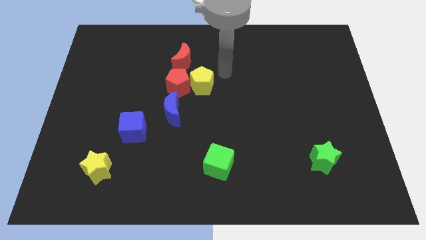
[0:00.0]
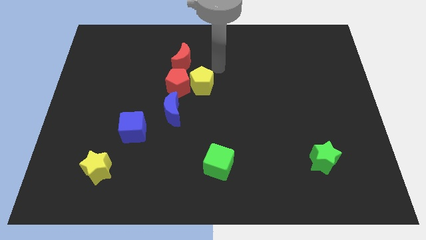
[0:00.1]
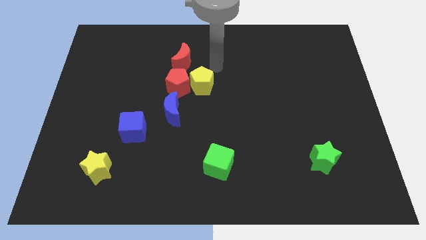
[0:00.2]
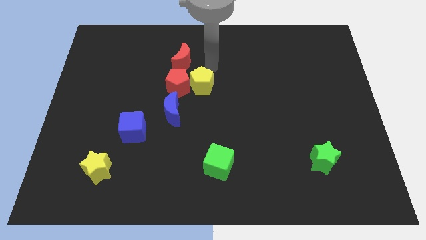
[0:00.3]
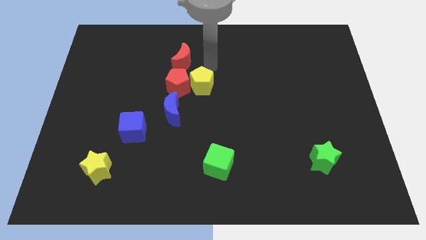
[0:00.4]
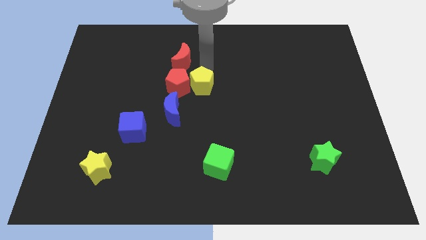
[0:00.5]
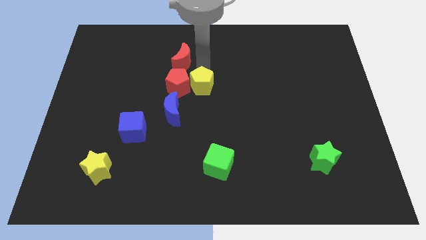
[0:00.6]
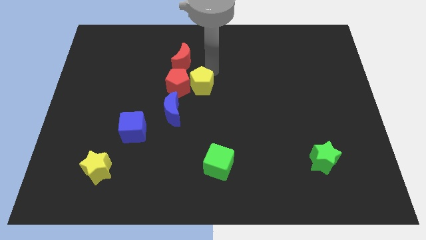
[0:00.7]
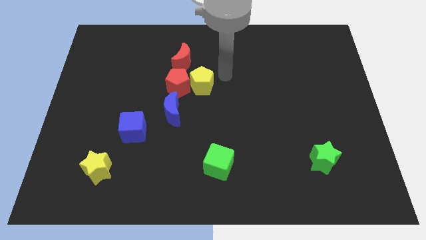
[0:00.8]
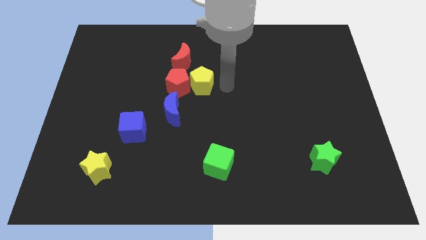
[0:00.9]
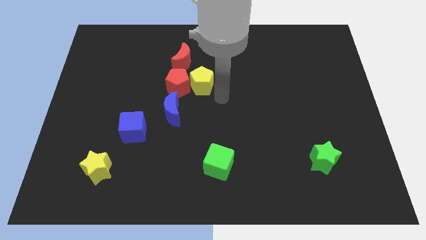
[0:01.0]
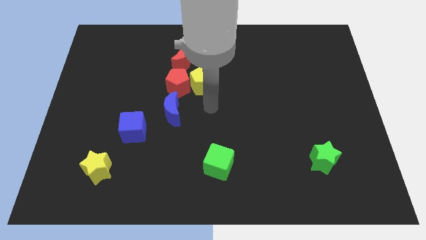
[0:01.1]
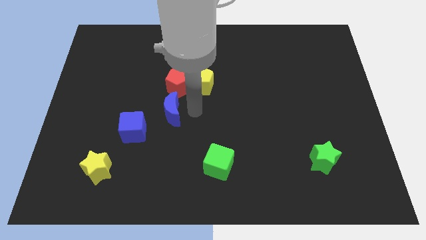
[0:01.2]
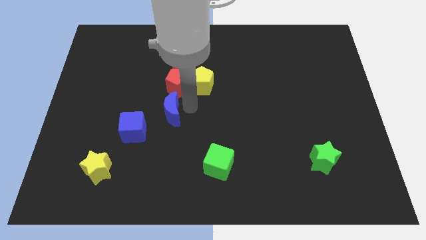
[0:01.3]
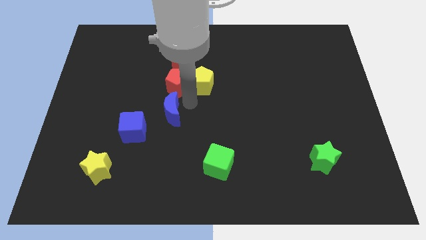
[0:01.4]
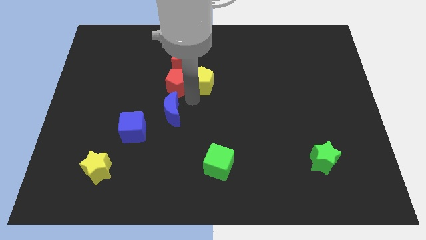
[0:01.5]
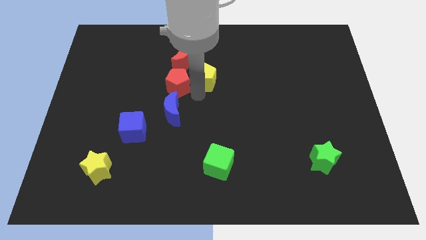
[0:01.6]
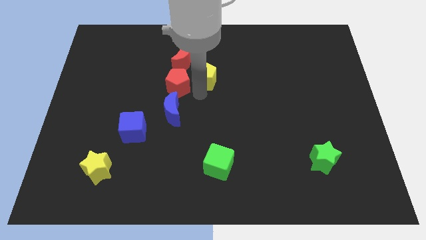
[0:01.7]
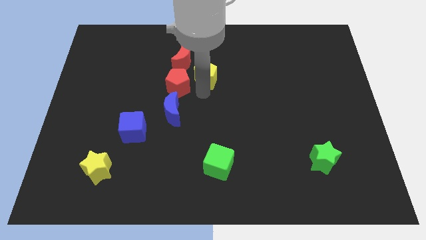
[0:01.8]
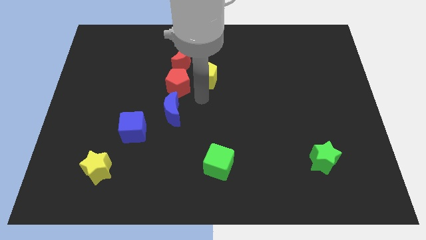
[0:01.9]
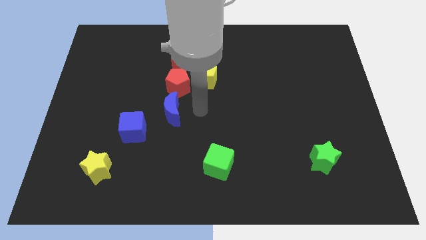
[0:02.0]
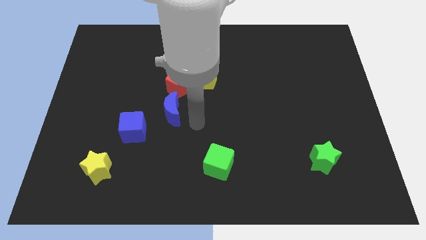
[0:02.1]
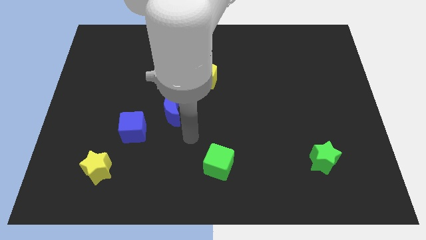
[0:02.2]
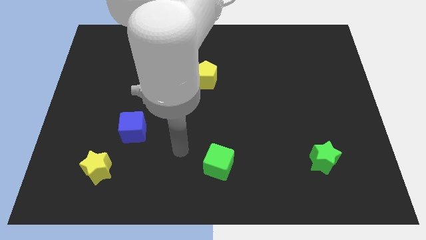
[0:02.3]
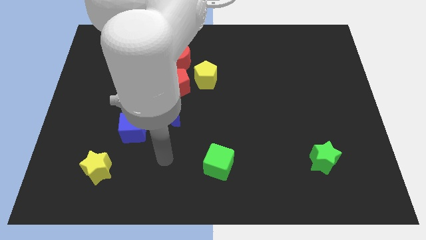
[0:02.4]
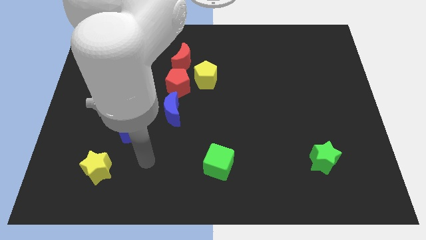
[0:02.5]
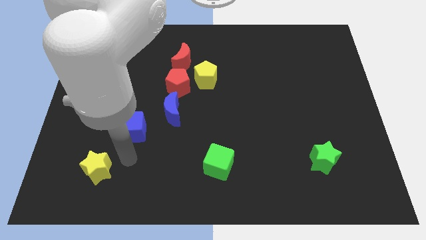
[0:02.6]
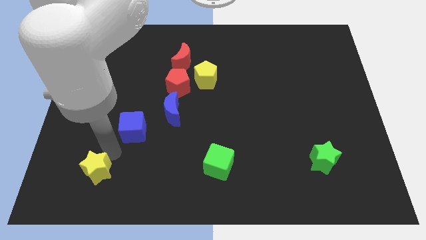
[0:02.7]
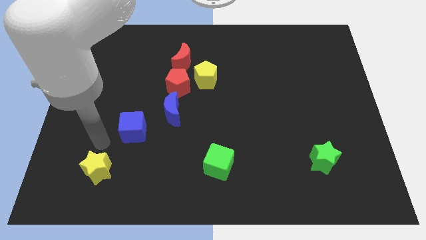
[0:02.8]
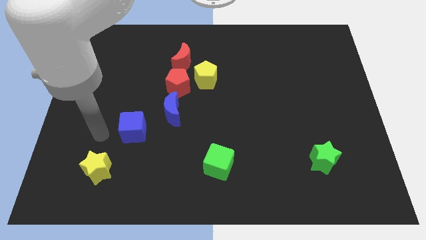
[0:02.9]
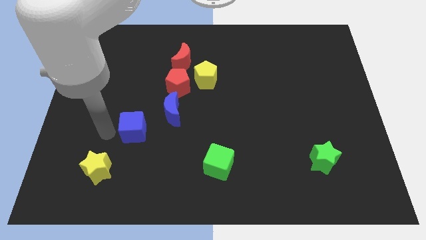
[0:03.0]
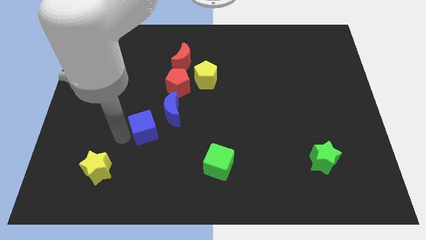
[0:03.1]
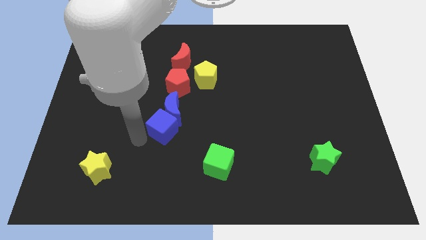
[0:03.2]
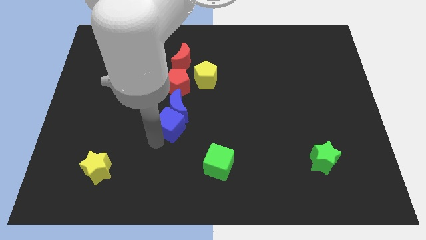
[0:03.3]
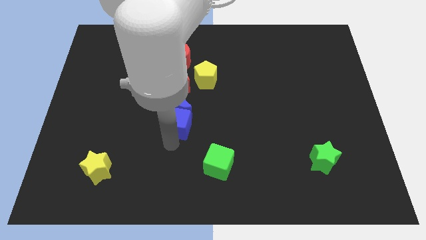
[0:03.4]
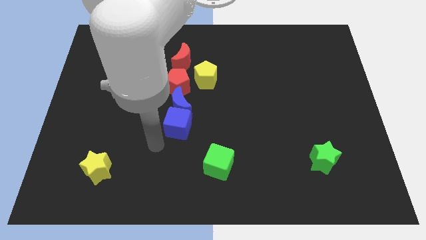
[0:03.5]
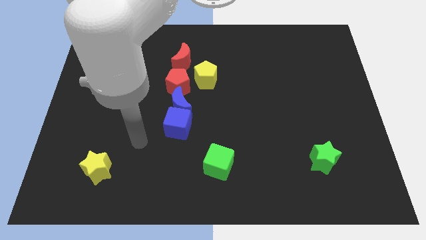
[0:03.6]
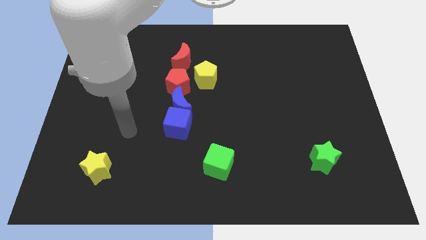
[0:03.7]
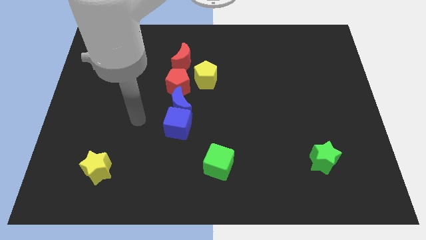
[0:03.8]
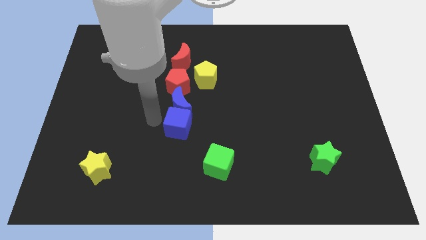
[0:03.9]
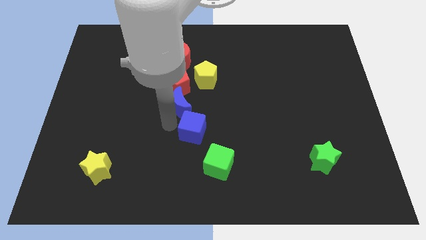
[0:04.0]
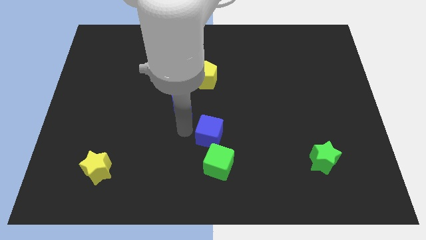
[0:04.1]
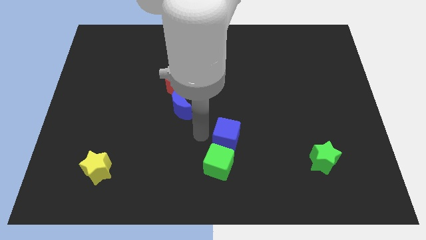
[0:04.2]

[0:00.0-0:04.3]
place the blue cube top to the green cube

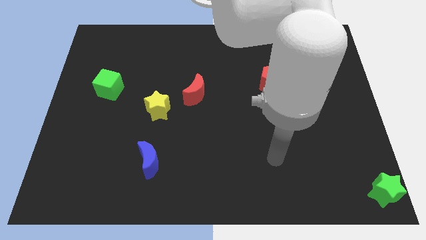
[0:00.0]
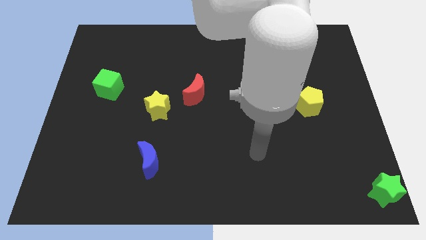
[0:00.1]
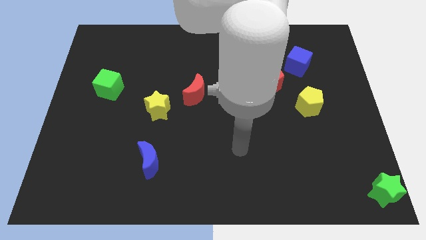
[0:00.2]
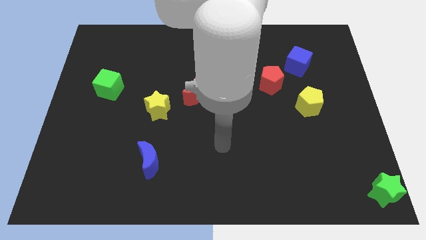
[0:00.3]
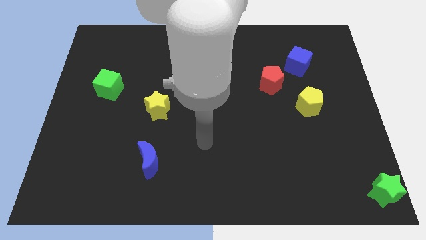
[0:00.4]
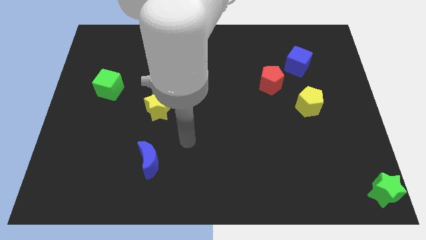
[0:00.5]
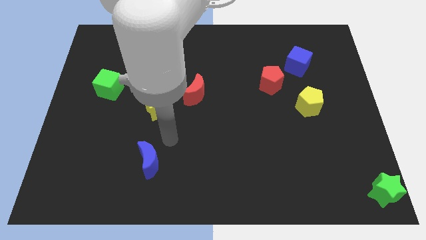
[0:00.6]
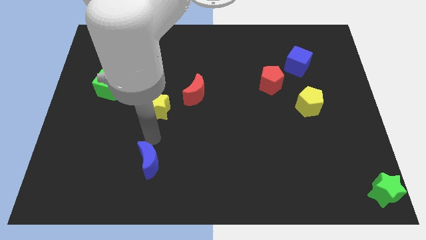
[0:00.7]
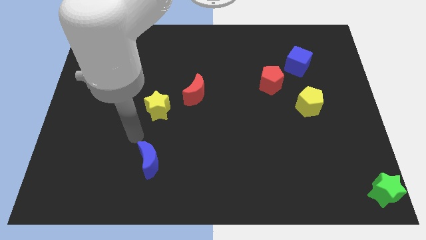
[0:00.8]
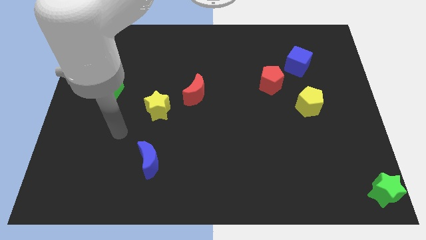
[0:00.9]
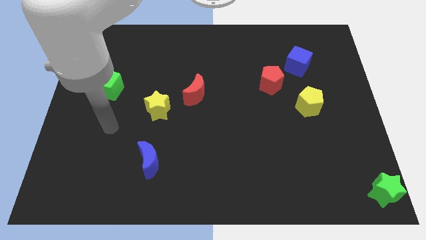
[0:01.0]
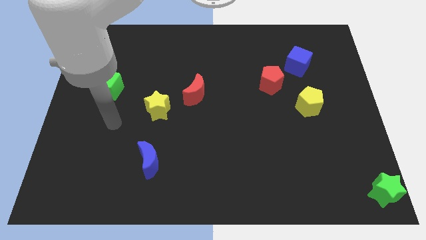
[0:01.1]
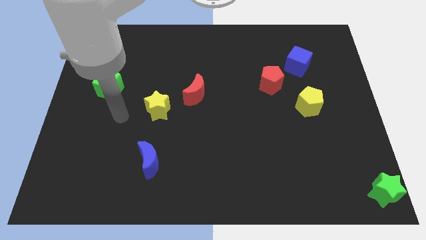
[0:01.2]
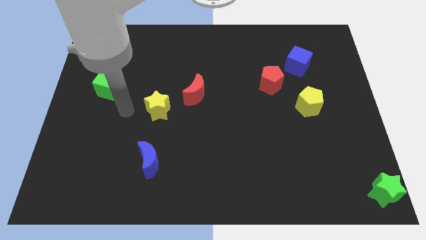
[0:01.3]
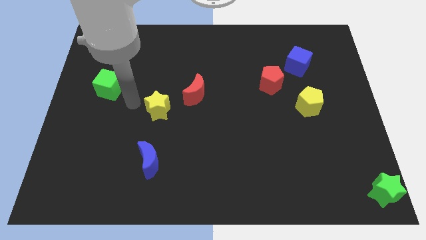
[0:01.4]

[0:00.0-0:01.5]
move your arm to the right of the green cube

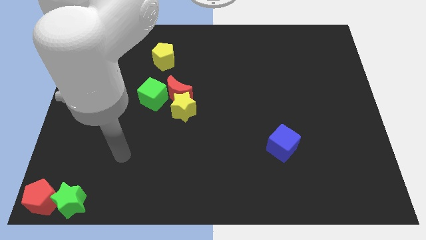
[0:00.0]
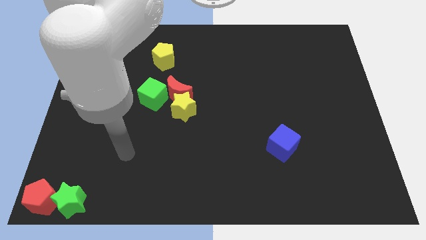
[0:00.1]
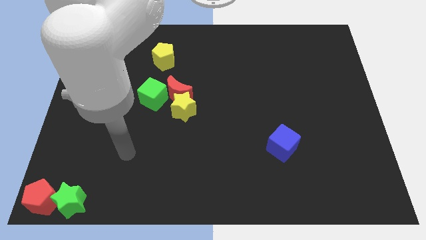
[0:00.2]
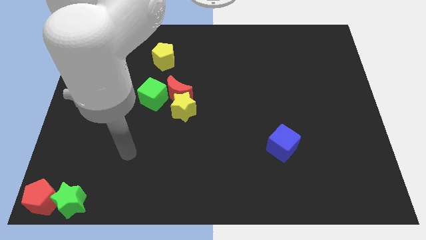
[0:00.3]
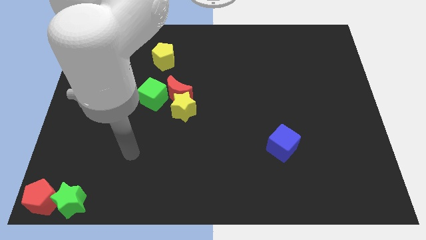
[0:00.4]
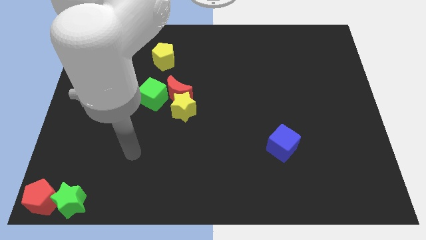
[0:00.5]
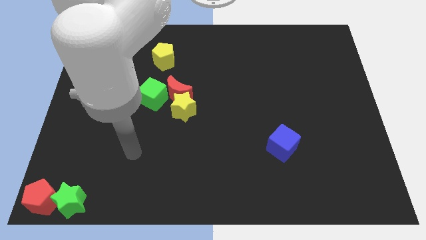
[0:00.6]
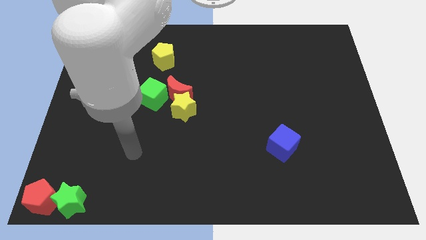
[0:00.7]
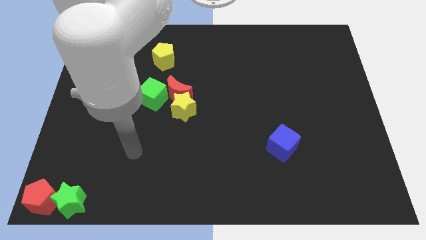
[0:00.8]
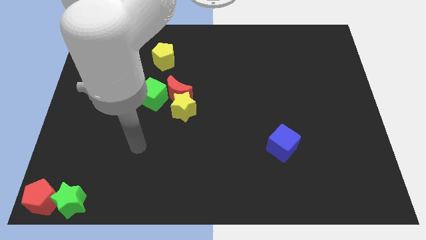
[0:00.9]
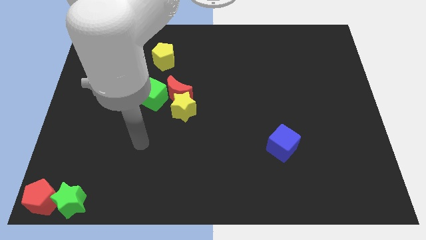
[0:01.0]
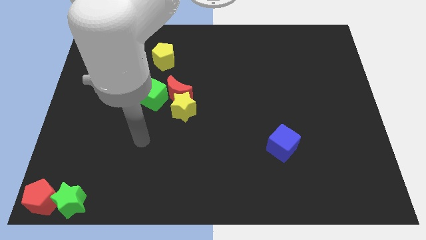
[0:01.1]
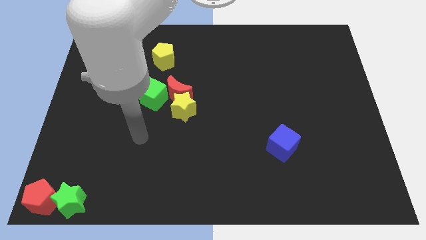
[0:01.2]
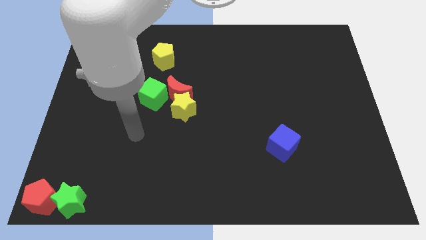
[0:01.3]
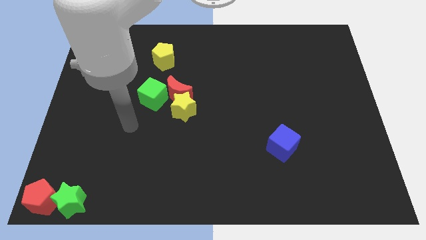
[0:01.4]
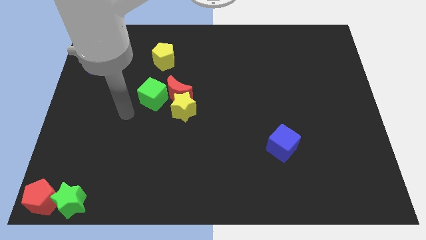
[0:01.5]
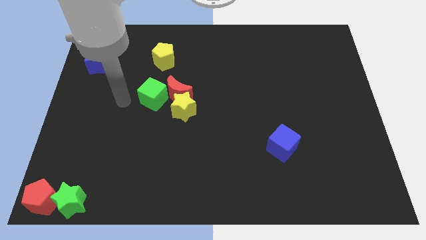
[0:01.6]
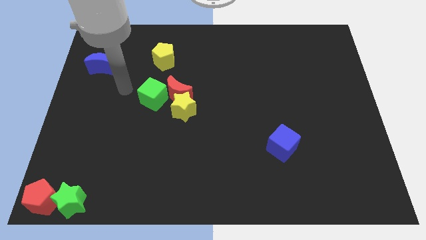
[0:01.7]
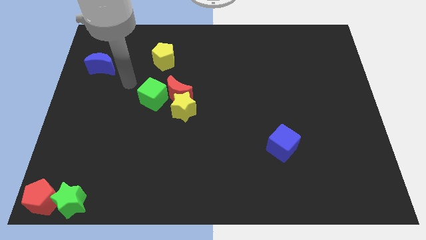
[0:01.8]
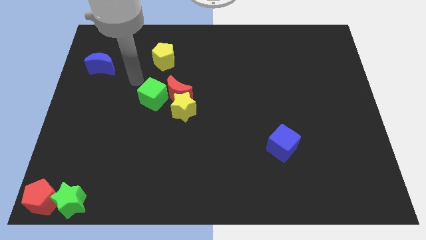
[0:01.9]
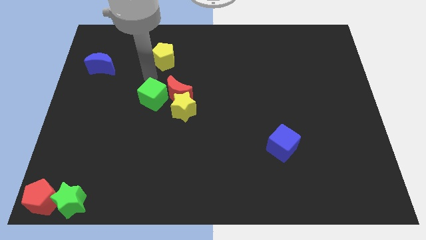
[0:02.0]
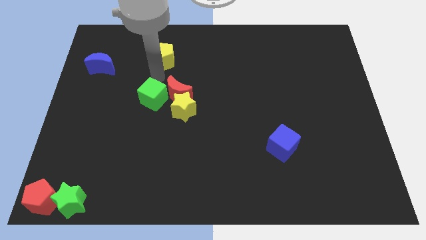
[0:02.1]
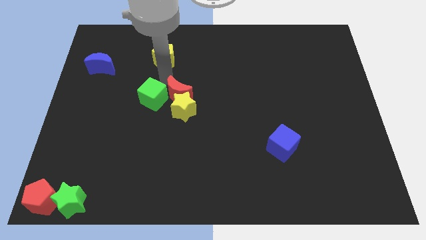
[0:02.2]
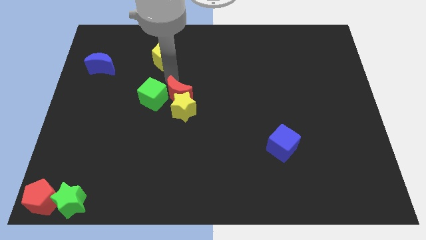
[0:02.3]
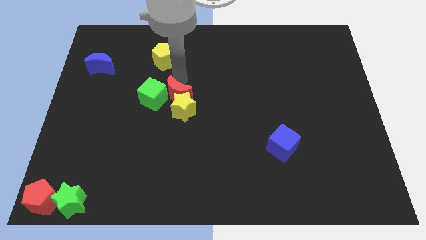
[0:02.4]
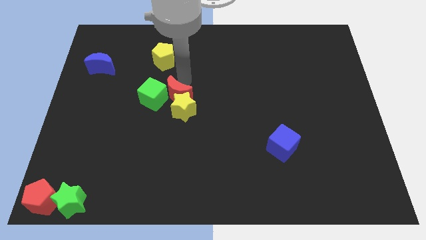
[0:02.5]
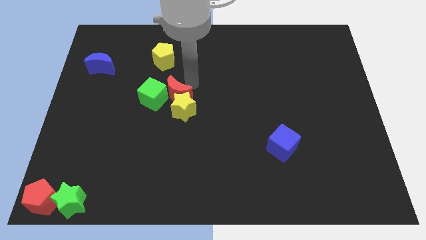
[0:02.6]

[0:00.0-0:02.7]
move the arm close to the red crescent

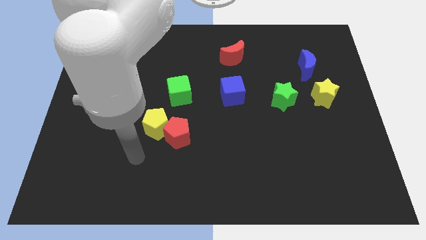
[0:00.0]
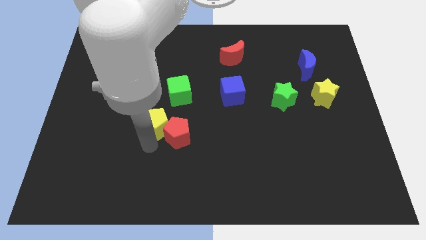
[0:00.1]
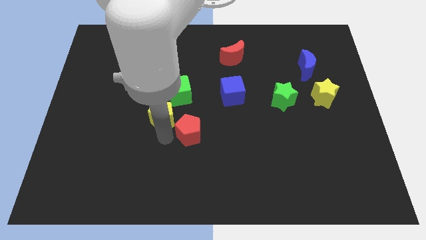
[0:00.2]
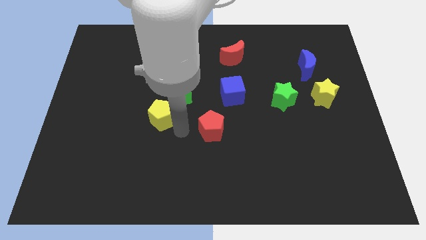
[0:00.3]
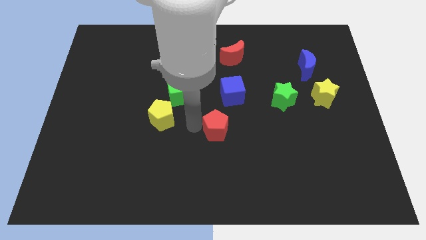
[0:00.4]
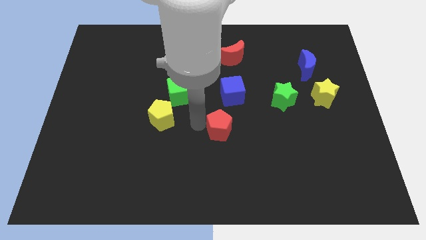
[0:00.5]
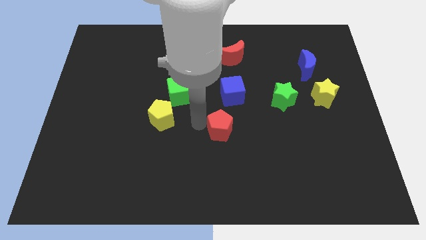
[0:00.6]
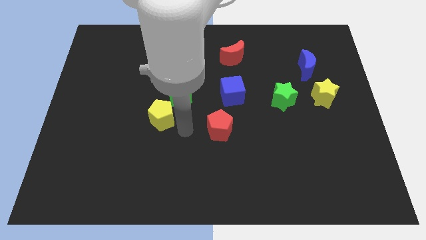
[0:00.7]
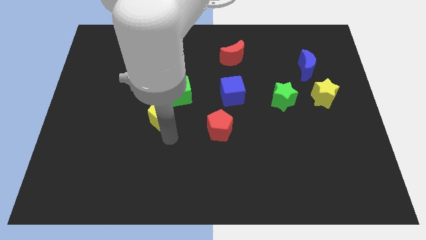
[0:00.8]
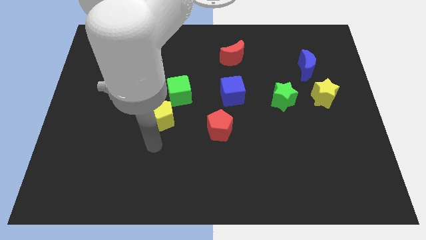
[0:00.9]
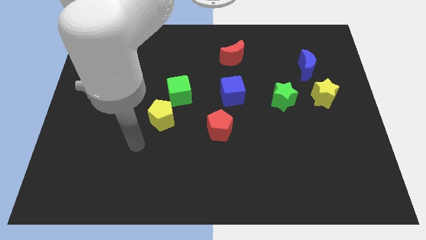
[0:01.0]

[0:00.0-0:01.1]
move the red pentagon just below the blue cube
